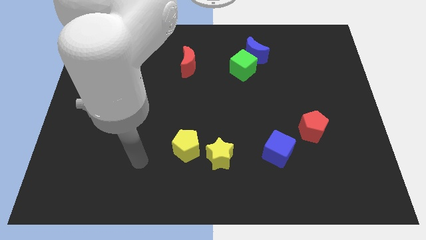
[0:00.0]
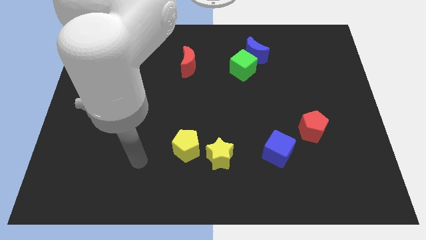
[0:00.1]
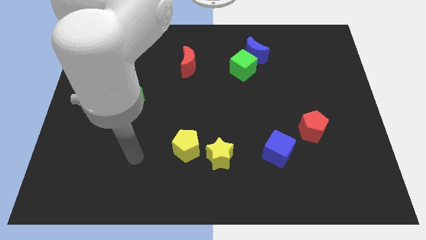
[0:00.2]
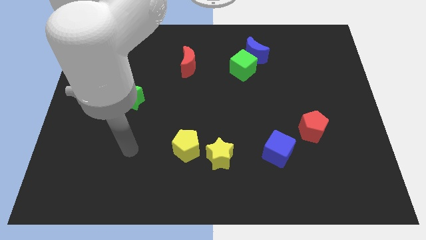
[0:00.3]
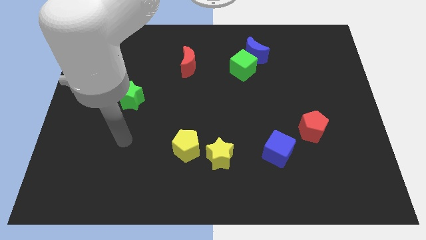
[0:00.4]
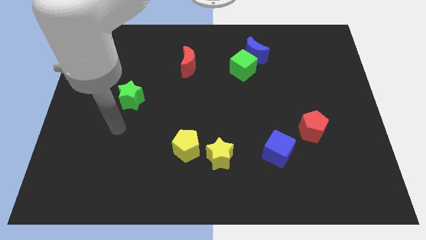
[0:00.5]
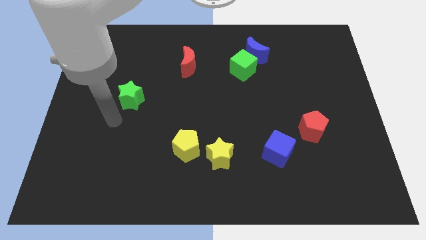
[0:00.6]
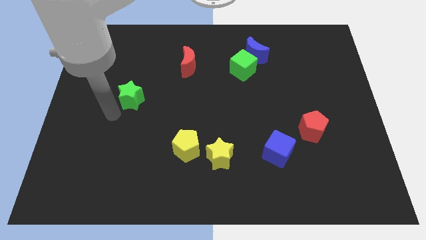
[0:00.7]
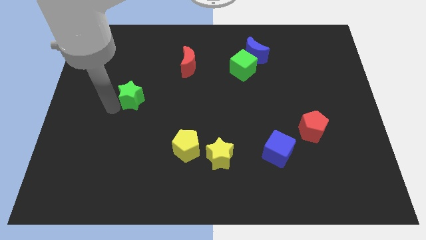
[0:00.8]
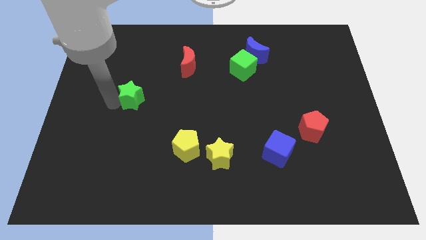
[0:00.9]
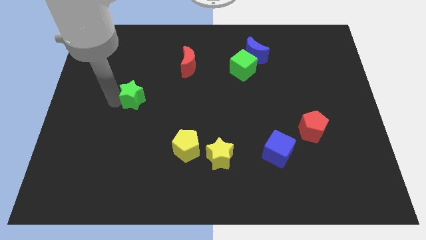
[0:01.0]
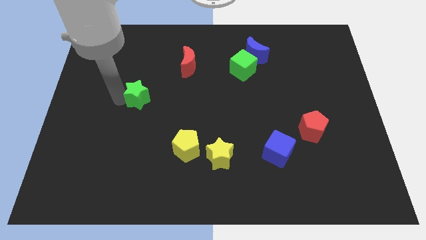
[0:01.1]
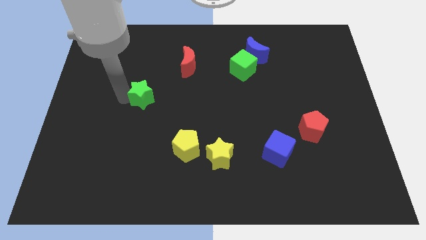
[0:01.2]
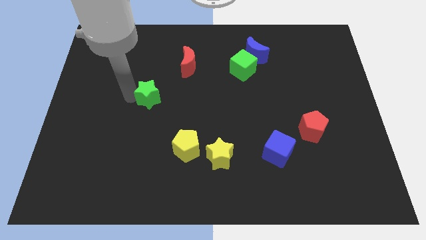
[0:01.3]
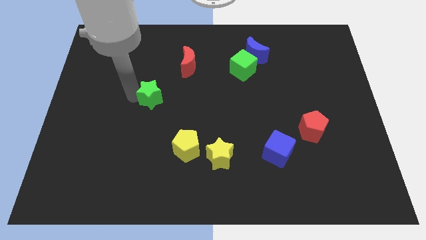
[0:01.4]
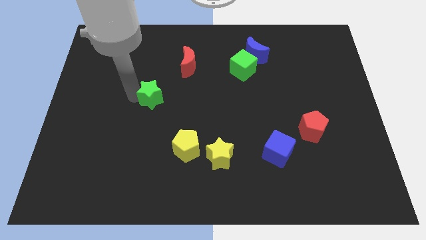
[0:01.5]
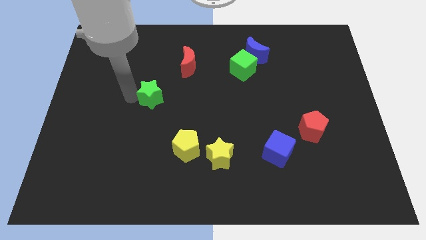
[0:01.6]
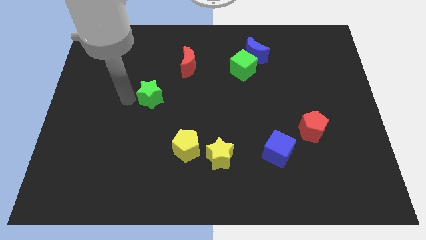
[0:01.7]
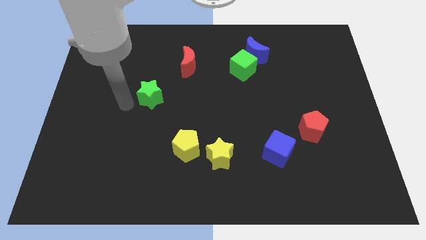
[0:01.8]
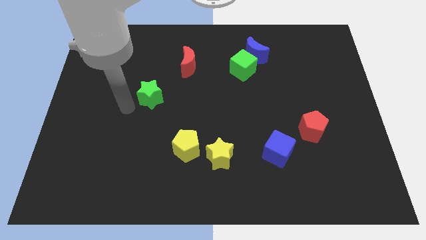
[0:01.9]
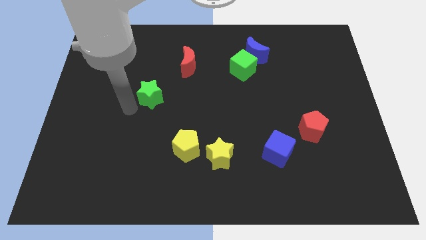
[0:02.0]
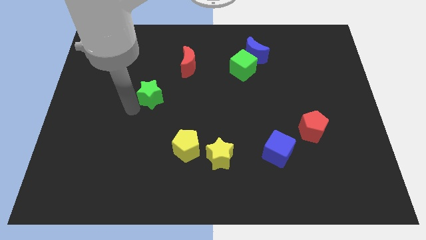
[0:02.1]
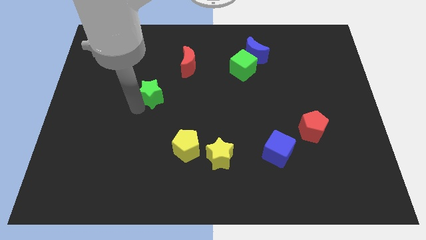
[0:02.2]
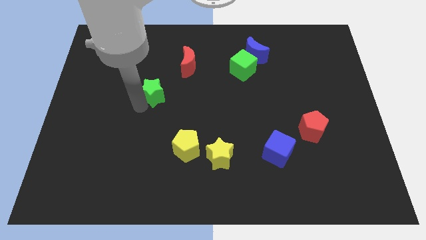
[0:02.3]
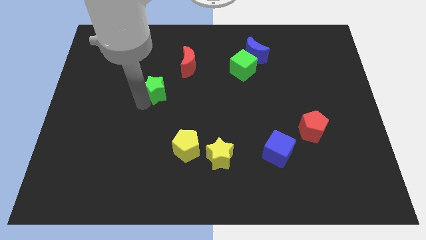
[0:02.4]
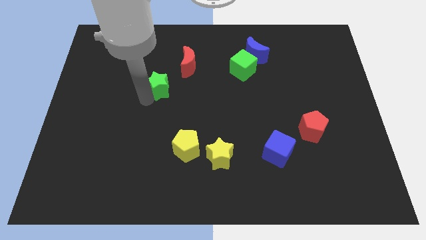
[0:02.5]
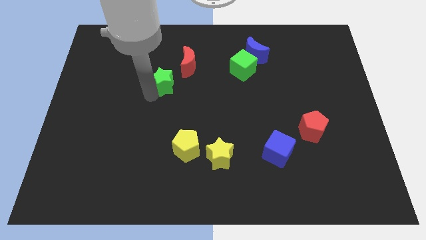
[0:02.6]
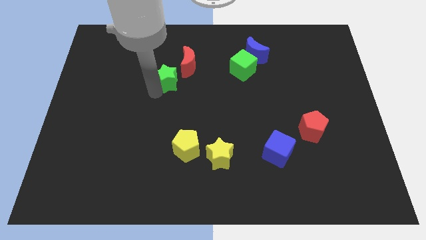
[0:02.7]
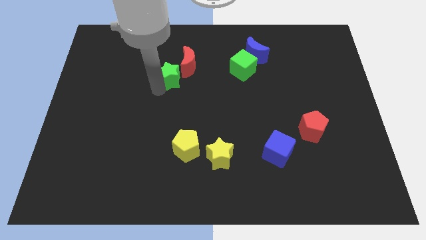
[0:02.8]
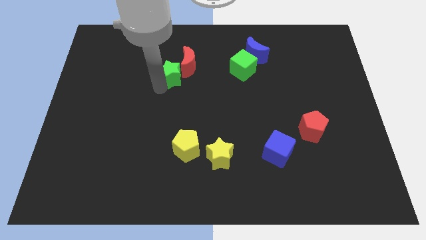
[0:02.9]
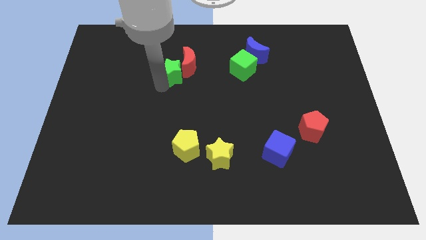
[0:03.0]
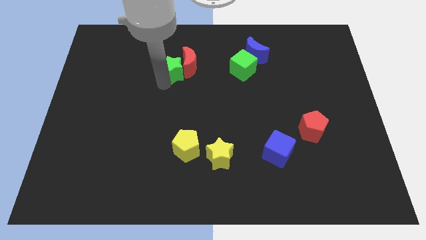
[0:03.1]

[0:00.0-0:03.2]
slide the green star to the red moon

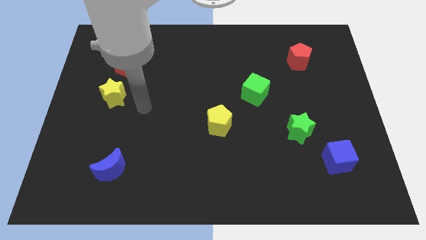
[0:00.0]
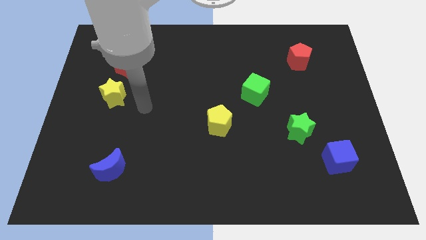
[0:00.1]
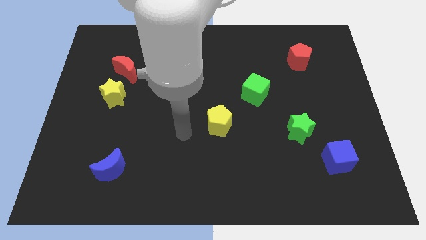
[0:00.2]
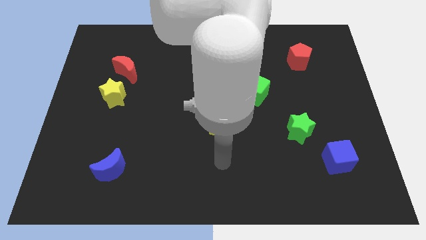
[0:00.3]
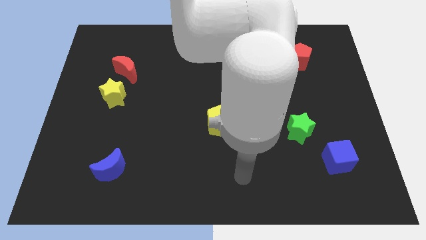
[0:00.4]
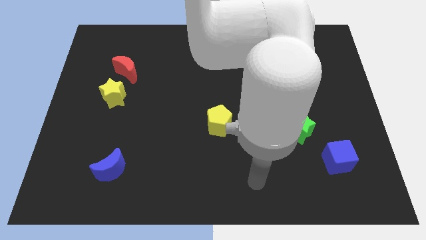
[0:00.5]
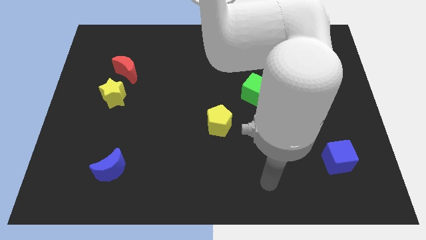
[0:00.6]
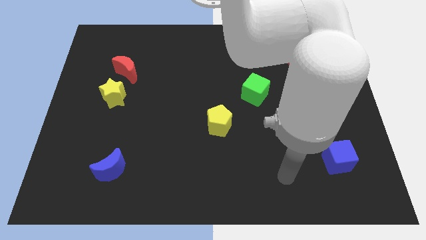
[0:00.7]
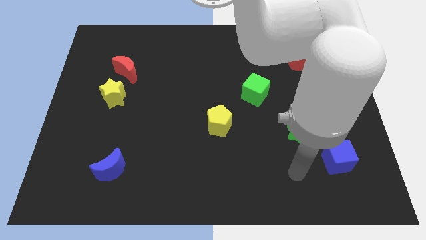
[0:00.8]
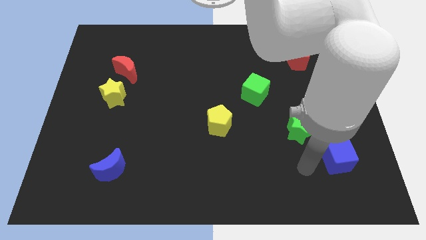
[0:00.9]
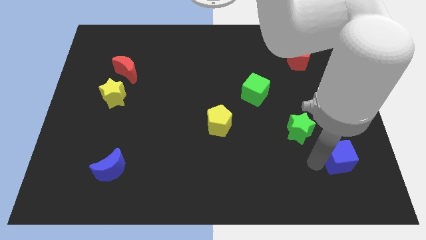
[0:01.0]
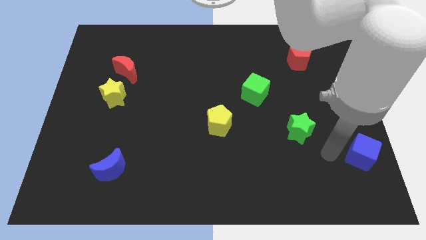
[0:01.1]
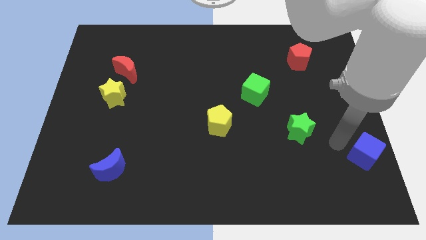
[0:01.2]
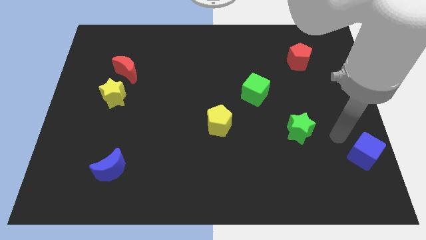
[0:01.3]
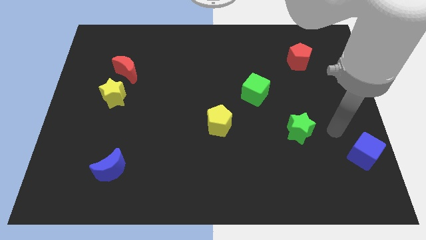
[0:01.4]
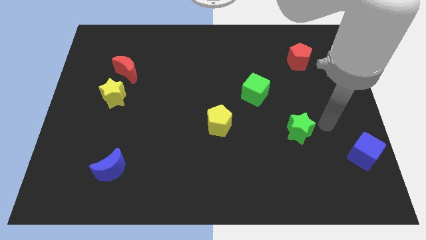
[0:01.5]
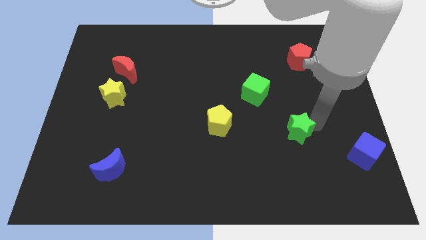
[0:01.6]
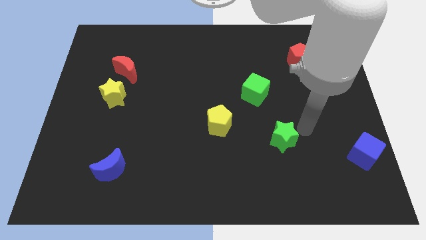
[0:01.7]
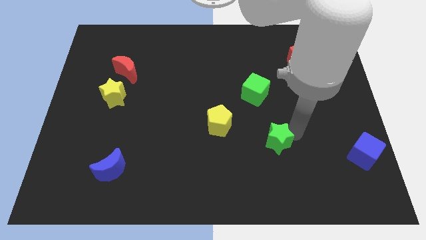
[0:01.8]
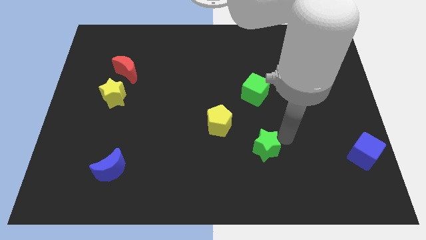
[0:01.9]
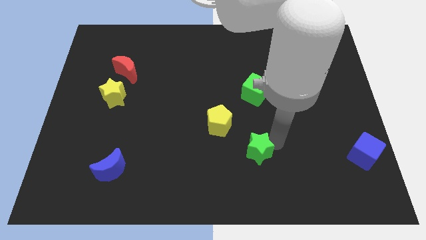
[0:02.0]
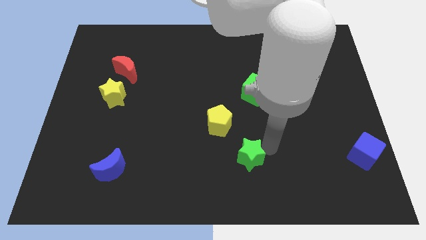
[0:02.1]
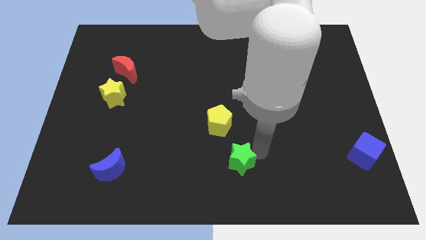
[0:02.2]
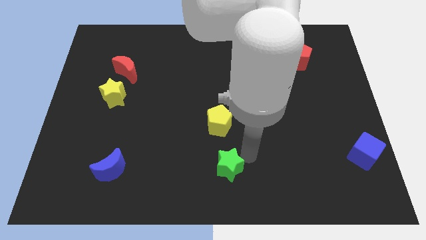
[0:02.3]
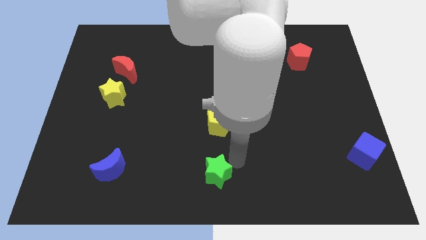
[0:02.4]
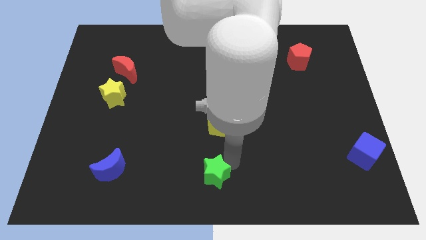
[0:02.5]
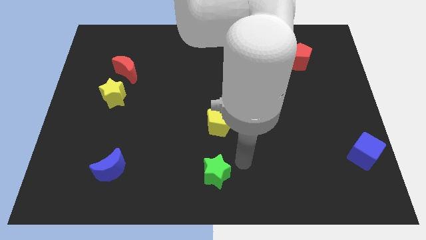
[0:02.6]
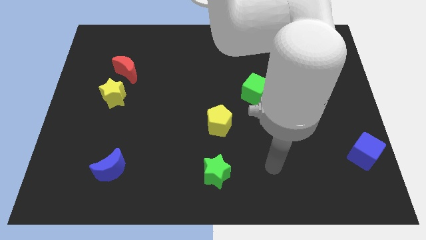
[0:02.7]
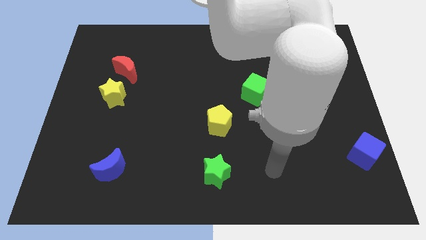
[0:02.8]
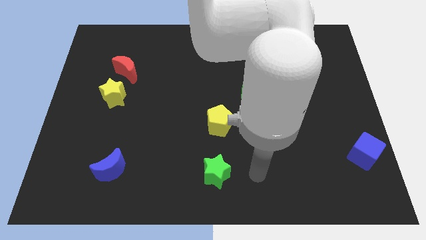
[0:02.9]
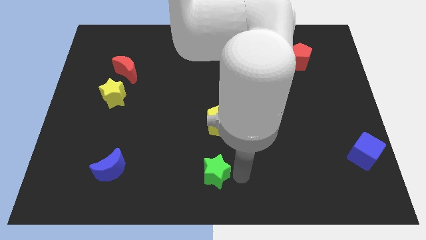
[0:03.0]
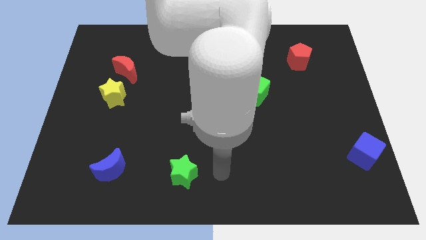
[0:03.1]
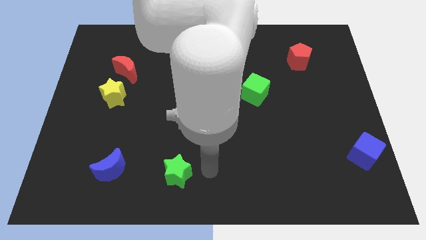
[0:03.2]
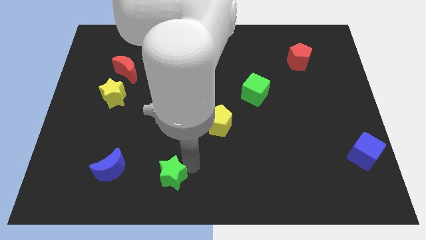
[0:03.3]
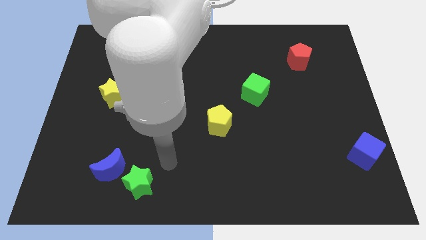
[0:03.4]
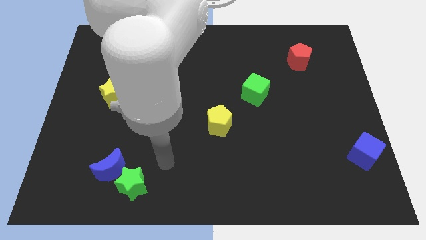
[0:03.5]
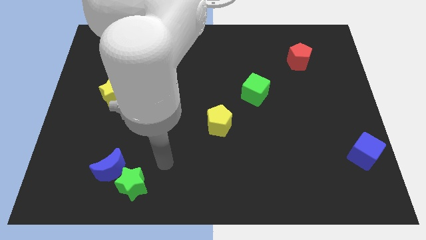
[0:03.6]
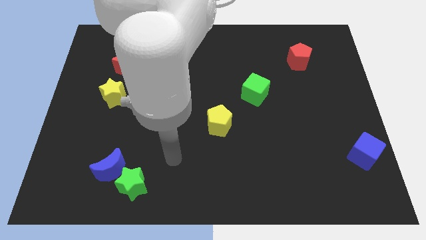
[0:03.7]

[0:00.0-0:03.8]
put the green star to the blue moon

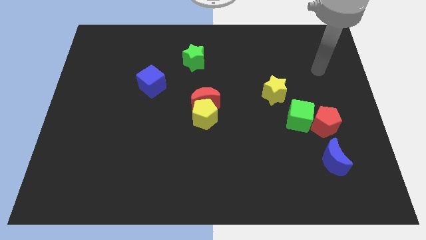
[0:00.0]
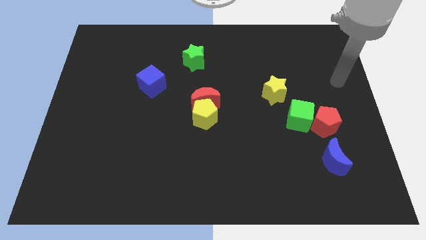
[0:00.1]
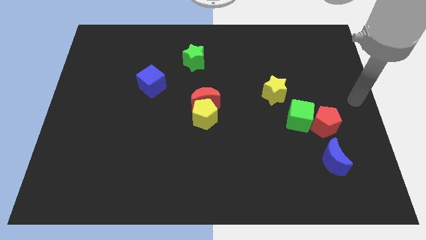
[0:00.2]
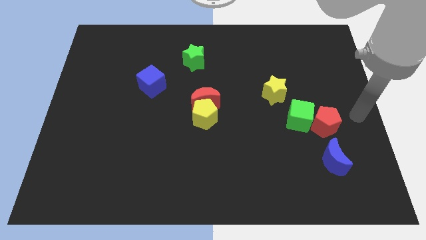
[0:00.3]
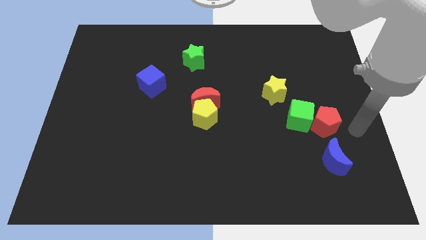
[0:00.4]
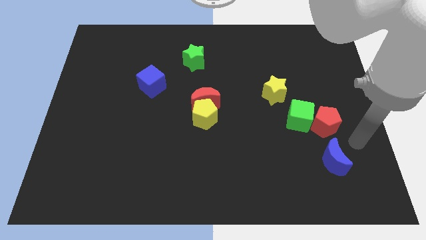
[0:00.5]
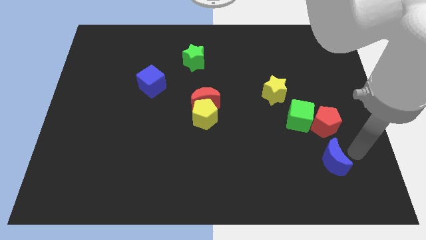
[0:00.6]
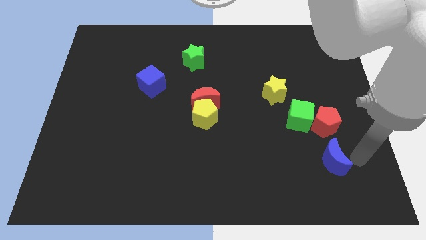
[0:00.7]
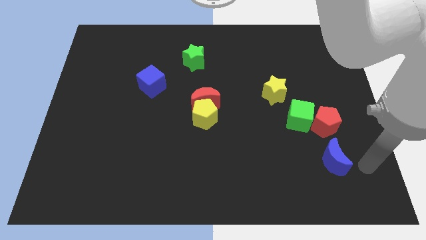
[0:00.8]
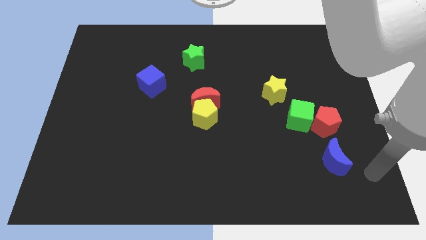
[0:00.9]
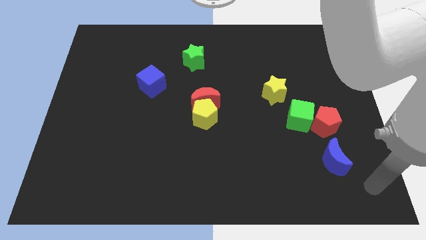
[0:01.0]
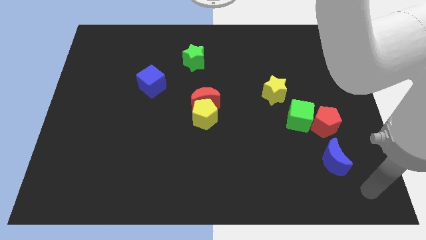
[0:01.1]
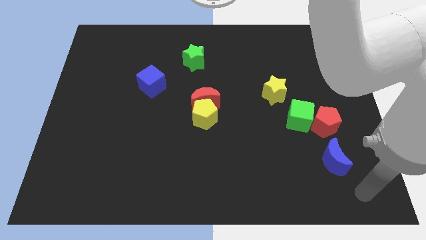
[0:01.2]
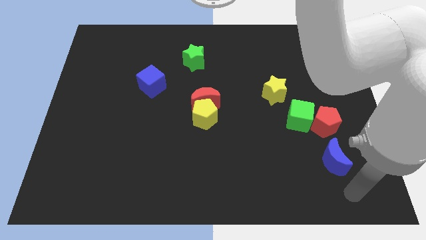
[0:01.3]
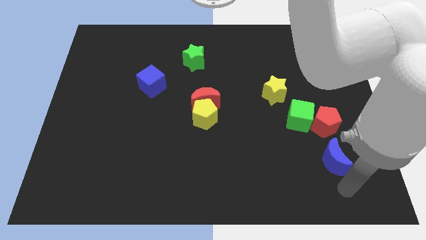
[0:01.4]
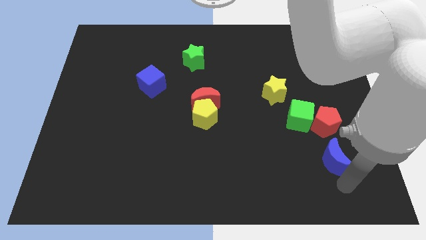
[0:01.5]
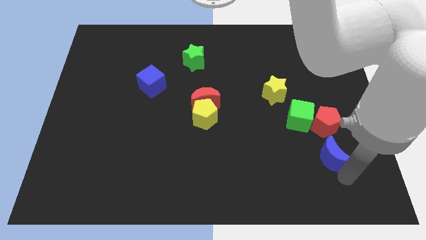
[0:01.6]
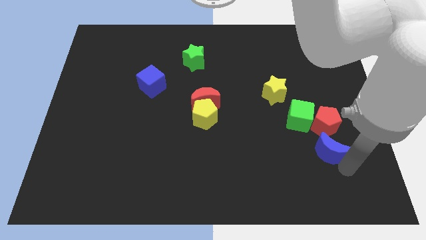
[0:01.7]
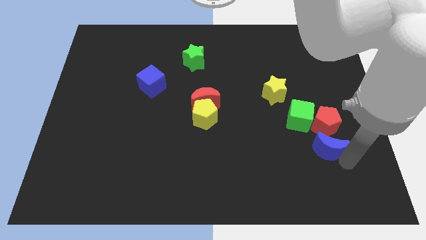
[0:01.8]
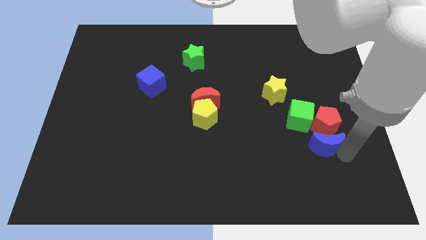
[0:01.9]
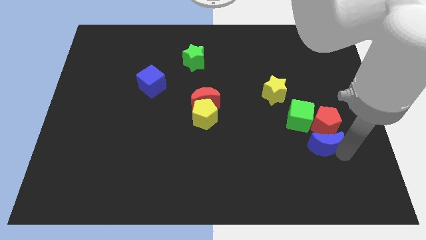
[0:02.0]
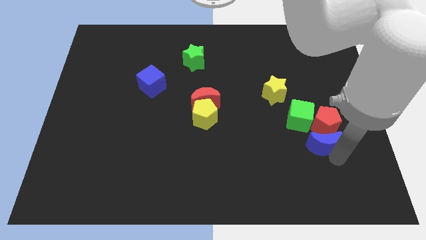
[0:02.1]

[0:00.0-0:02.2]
slide the blue moon close to the red pentagon
